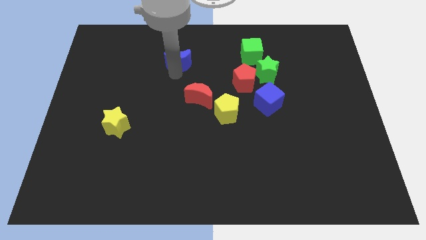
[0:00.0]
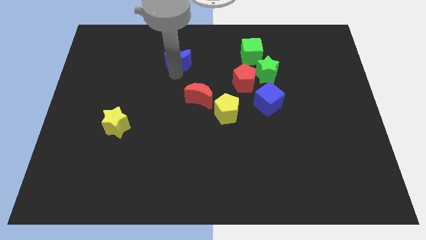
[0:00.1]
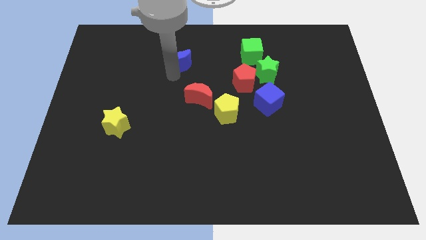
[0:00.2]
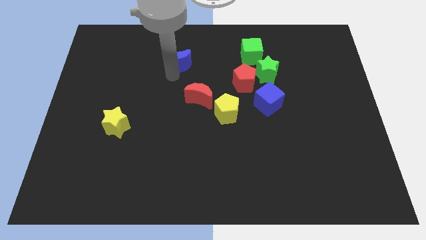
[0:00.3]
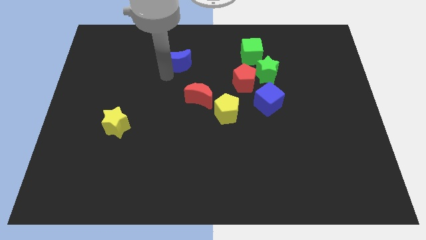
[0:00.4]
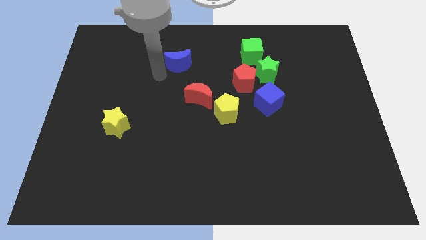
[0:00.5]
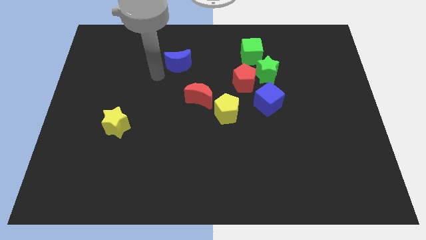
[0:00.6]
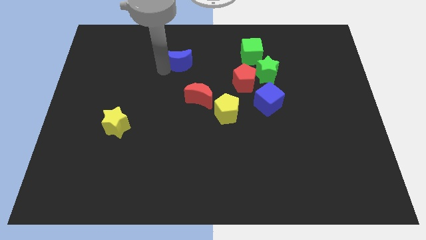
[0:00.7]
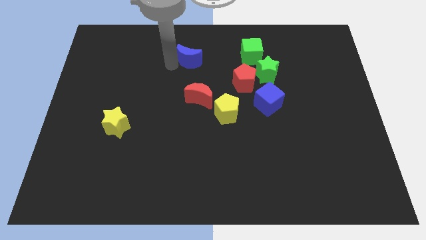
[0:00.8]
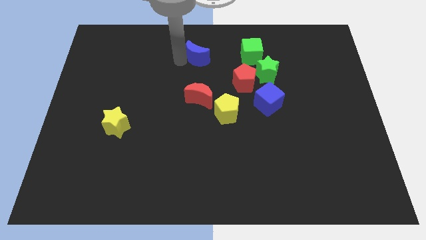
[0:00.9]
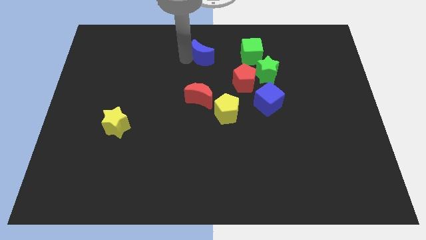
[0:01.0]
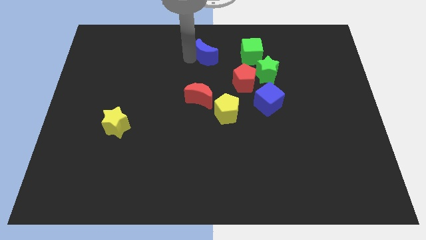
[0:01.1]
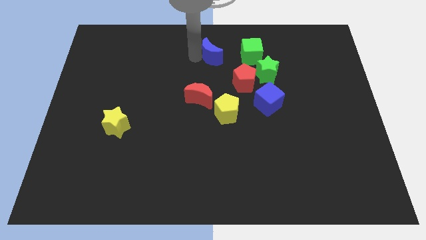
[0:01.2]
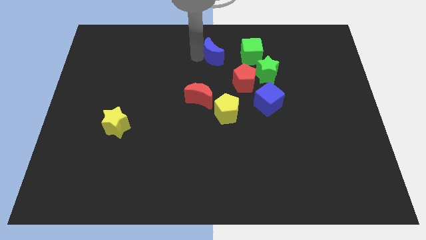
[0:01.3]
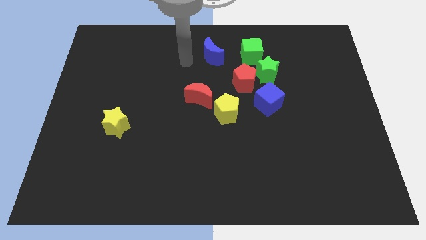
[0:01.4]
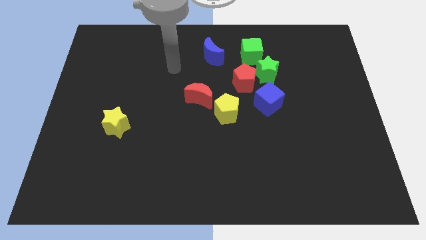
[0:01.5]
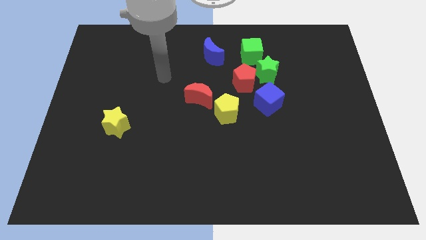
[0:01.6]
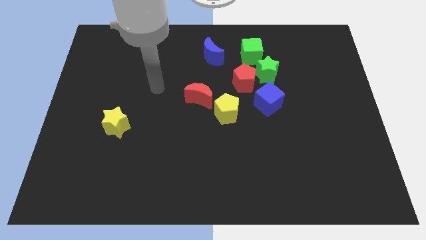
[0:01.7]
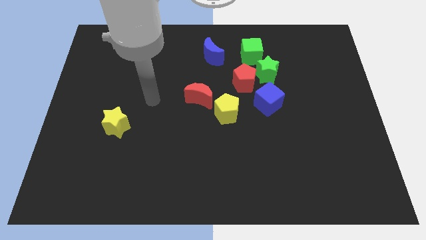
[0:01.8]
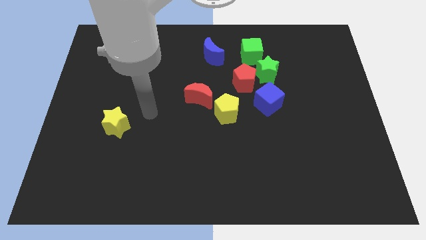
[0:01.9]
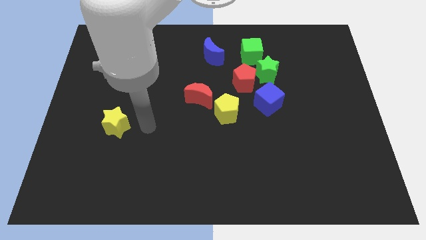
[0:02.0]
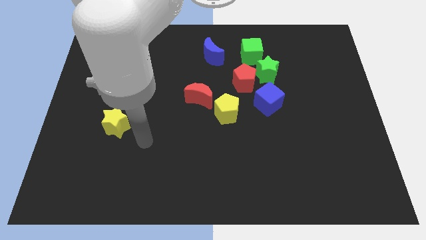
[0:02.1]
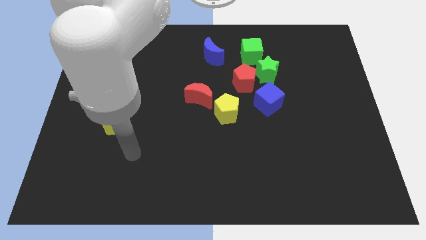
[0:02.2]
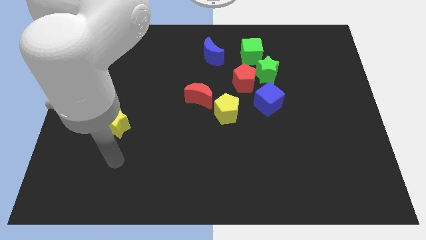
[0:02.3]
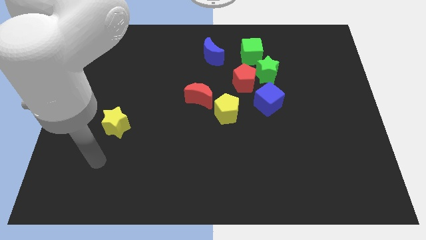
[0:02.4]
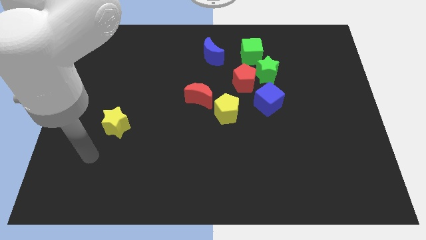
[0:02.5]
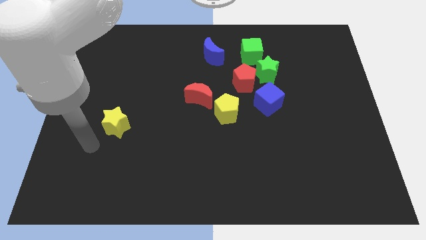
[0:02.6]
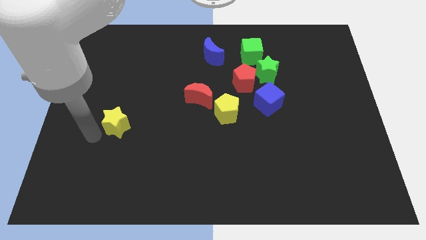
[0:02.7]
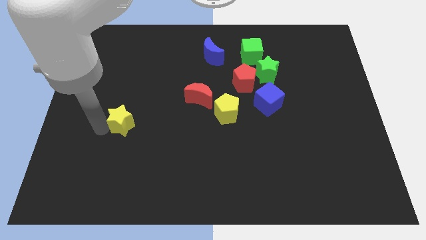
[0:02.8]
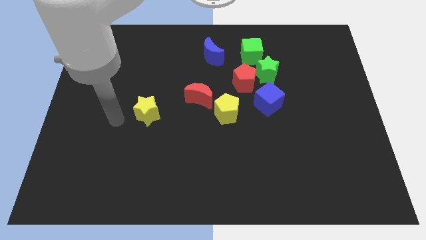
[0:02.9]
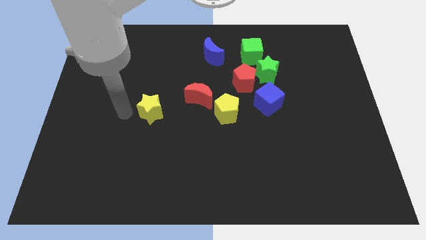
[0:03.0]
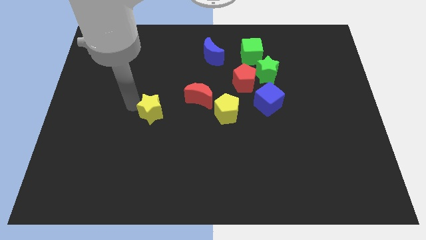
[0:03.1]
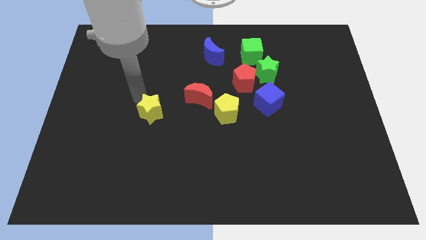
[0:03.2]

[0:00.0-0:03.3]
push the yellow star to the right

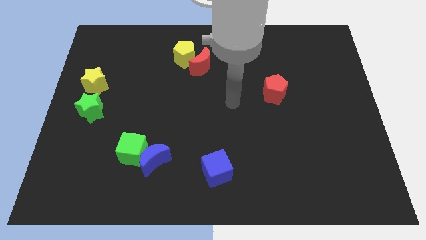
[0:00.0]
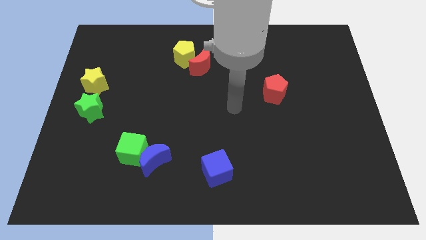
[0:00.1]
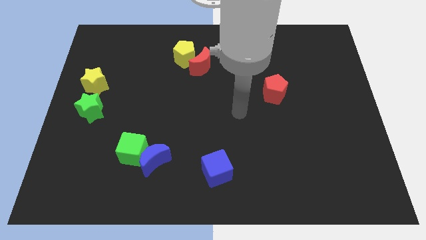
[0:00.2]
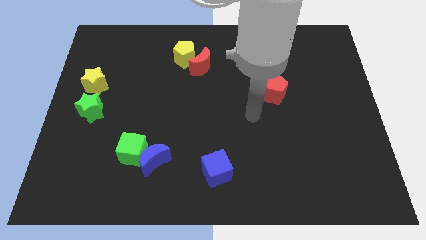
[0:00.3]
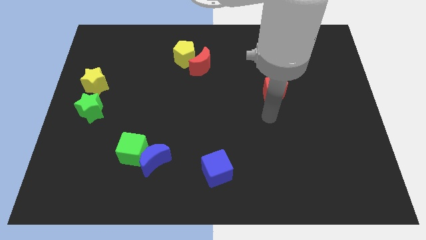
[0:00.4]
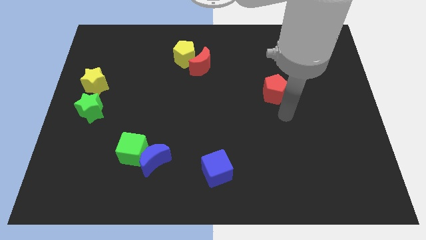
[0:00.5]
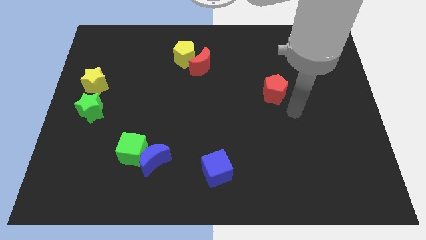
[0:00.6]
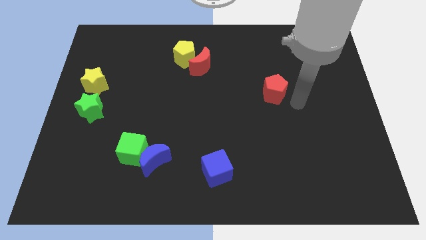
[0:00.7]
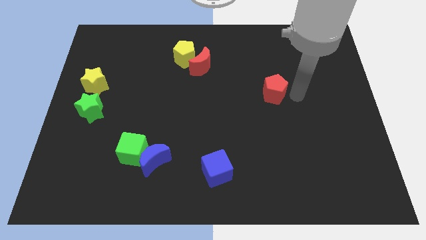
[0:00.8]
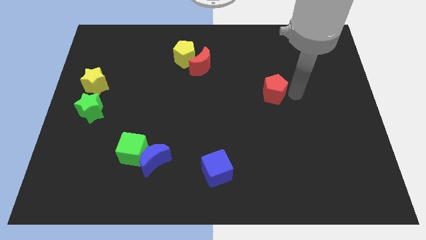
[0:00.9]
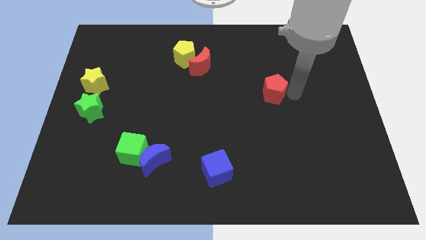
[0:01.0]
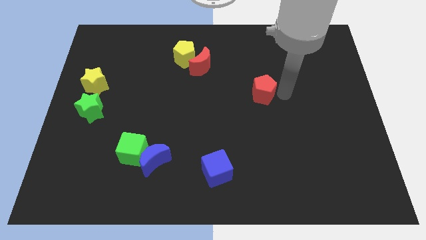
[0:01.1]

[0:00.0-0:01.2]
move your arm to the right of the red pentagon

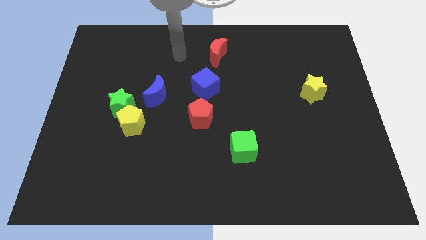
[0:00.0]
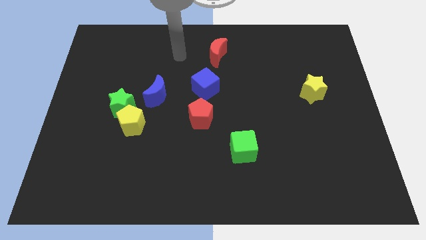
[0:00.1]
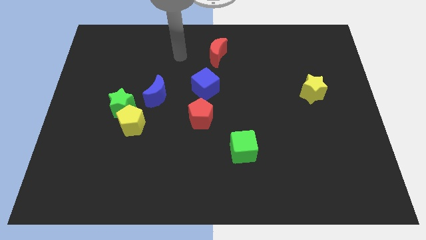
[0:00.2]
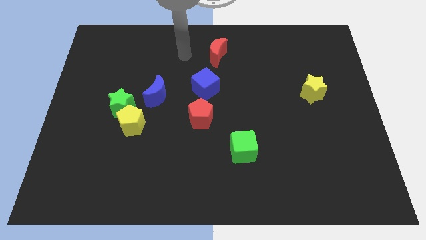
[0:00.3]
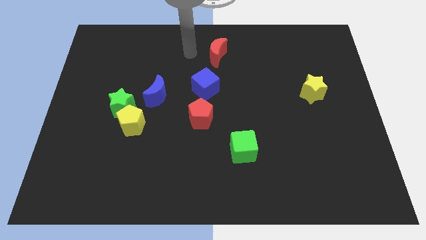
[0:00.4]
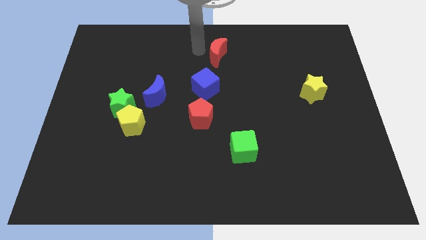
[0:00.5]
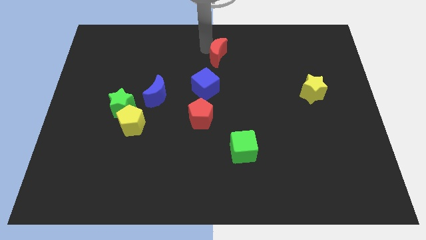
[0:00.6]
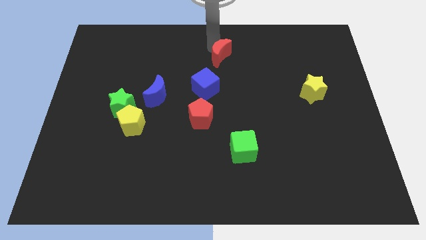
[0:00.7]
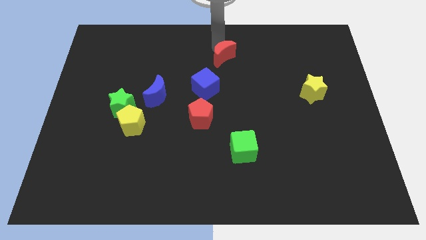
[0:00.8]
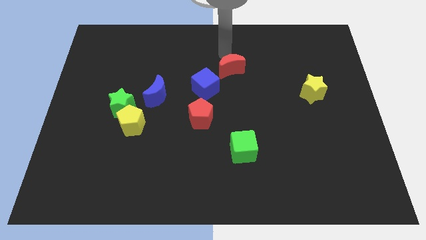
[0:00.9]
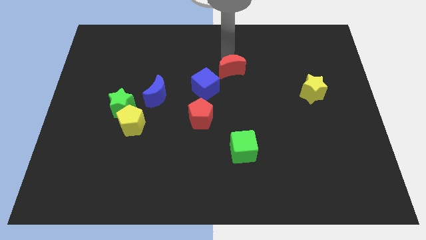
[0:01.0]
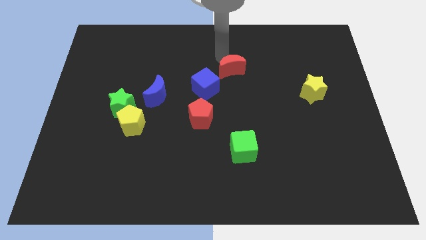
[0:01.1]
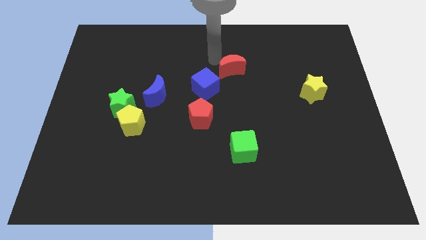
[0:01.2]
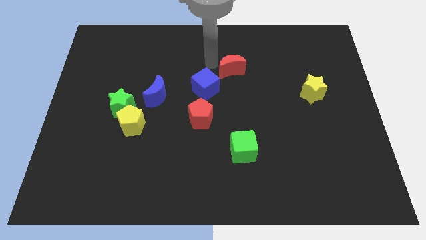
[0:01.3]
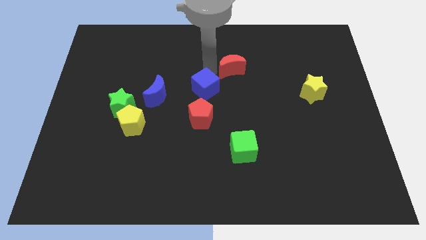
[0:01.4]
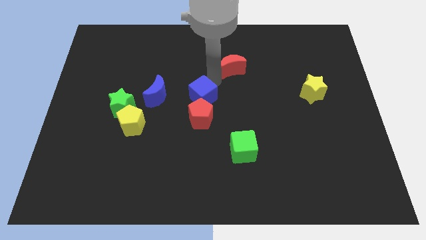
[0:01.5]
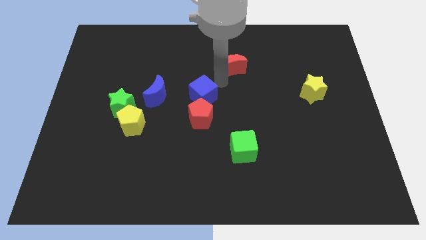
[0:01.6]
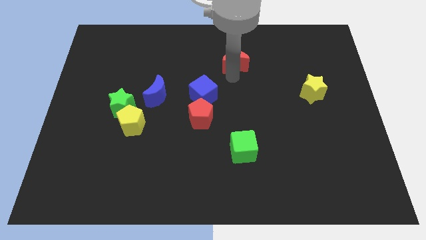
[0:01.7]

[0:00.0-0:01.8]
move your arm close to the red moon

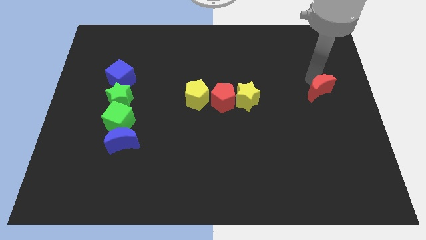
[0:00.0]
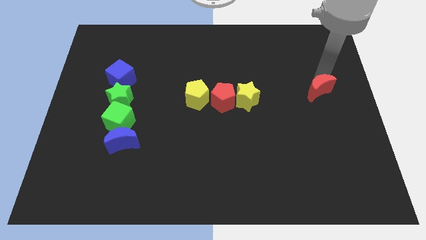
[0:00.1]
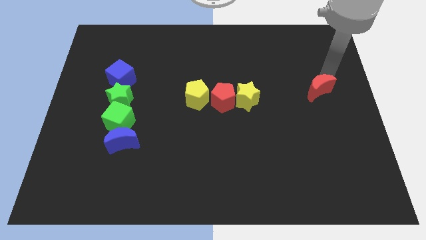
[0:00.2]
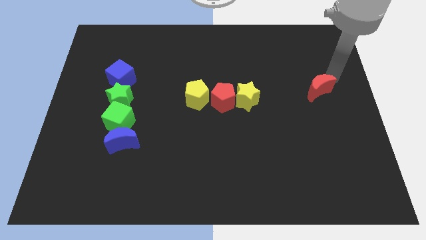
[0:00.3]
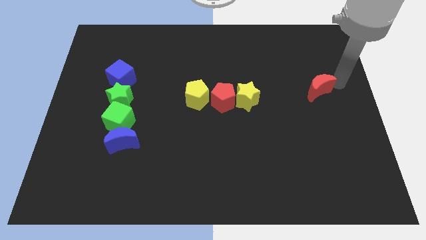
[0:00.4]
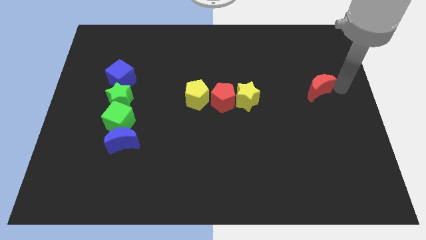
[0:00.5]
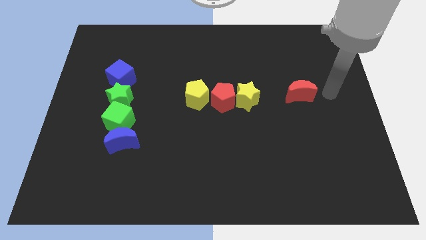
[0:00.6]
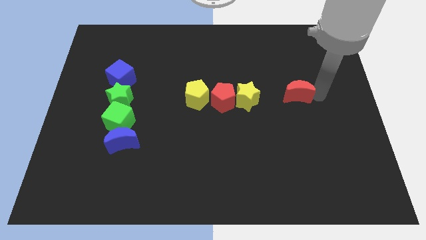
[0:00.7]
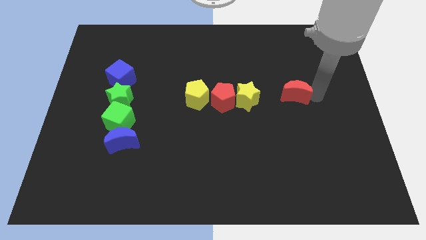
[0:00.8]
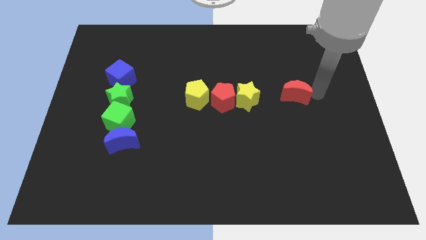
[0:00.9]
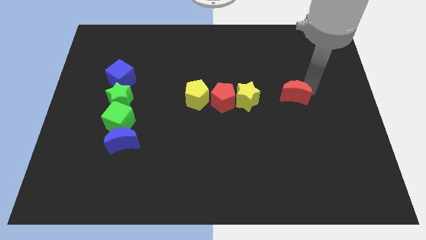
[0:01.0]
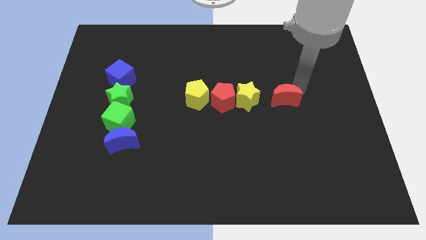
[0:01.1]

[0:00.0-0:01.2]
slide the red crescent slightly towards the yellow star

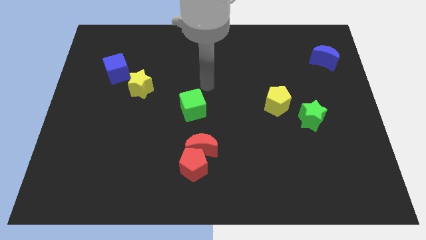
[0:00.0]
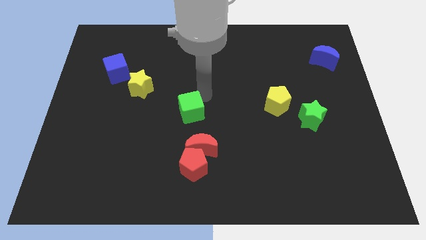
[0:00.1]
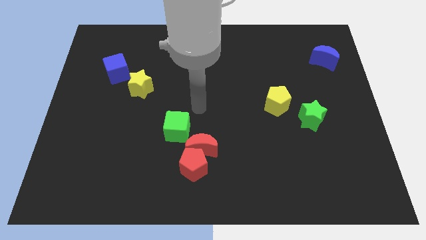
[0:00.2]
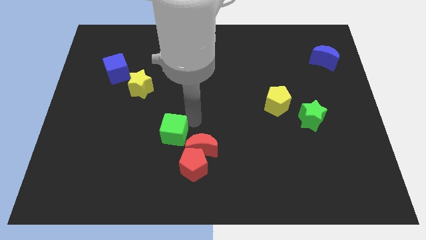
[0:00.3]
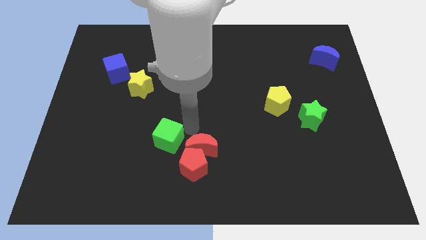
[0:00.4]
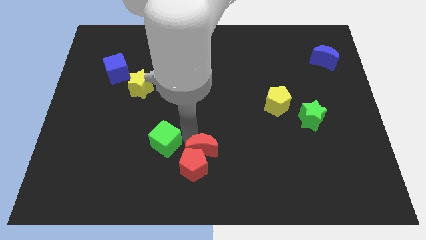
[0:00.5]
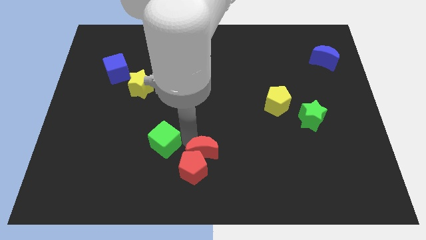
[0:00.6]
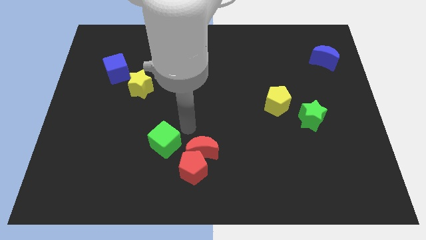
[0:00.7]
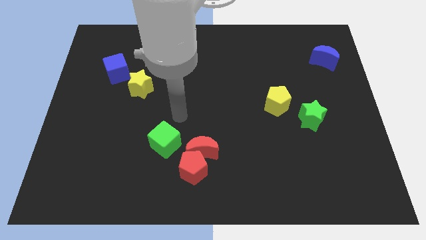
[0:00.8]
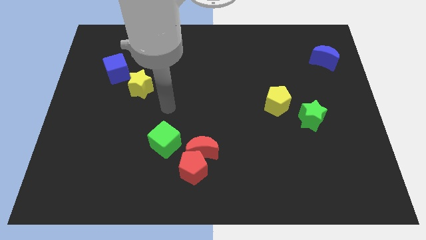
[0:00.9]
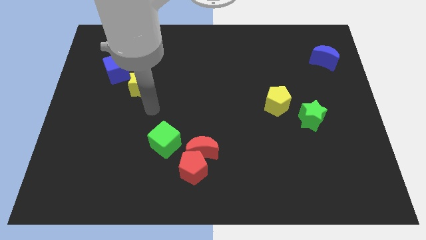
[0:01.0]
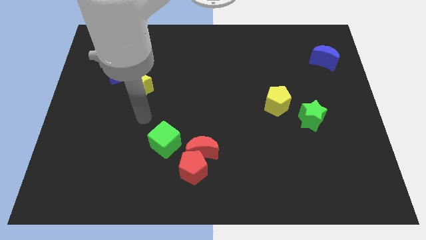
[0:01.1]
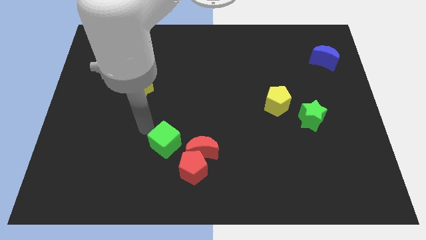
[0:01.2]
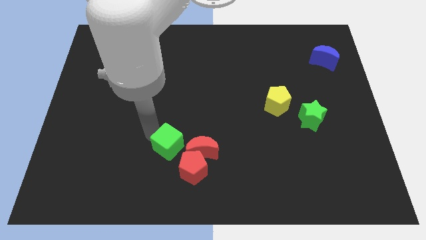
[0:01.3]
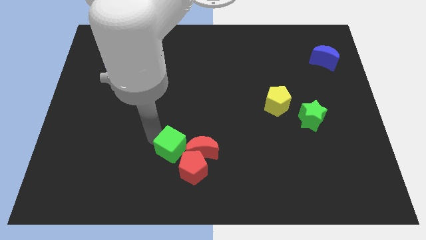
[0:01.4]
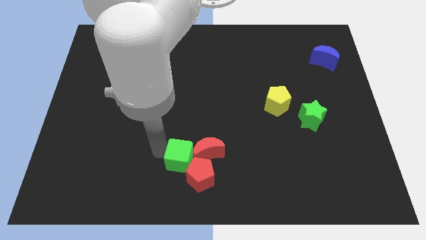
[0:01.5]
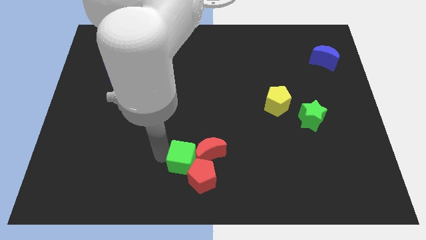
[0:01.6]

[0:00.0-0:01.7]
push the green cube into the group of red blocks
